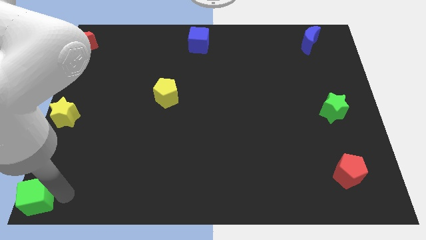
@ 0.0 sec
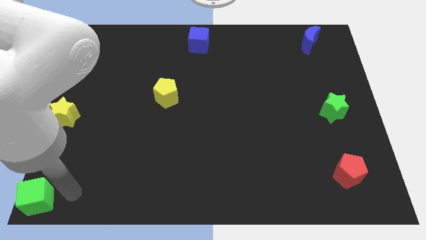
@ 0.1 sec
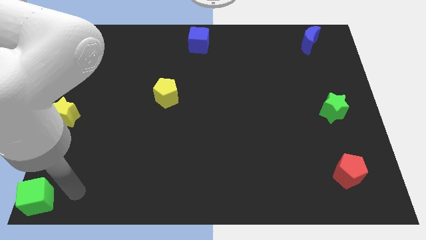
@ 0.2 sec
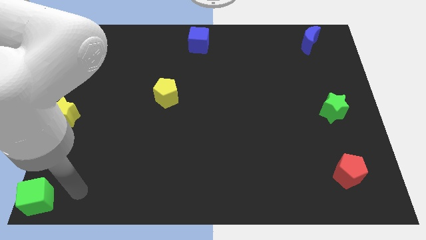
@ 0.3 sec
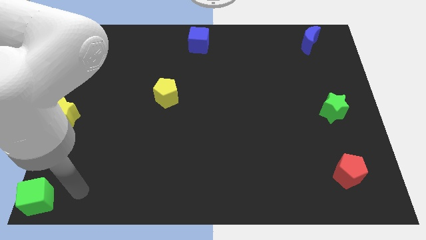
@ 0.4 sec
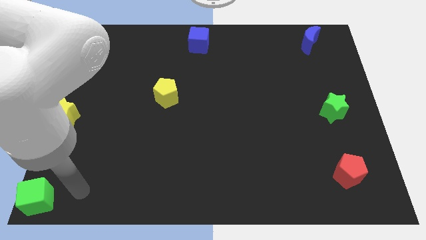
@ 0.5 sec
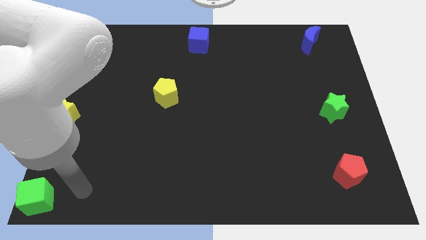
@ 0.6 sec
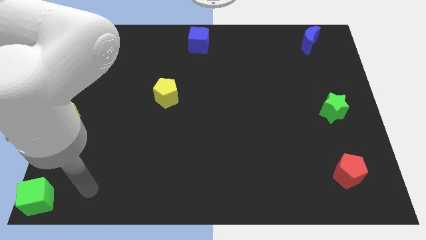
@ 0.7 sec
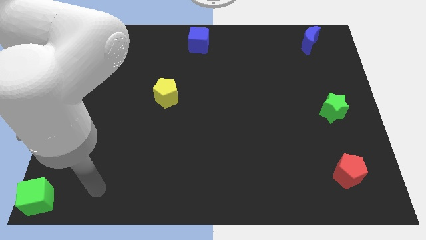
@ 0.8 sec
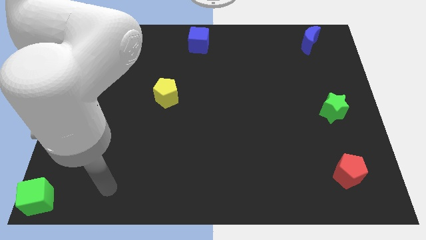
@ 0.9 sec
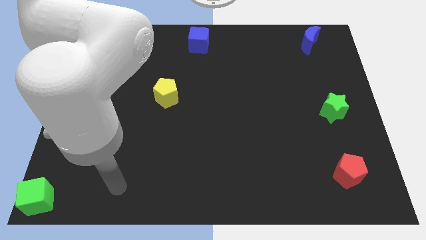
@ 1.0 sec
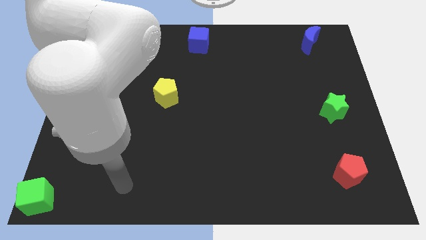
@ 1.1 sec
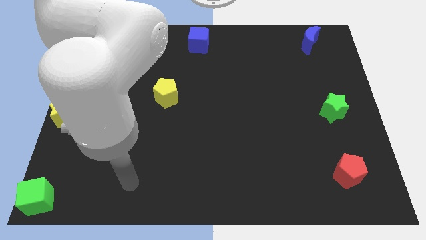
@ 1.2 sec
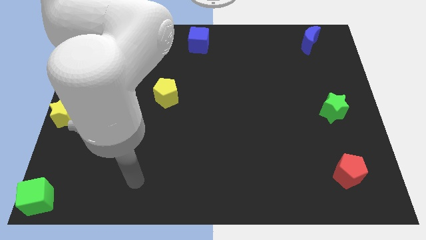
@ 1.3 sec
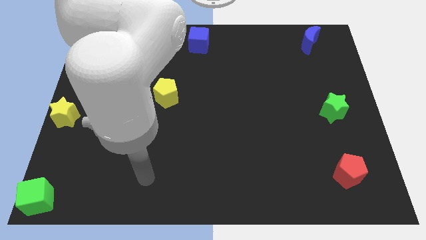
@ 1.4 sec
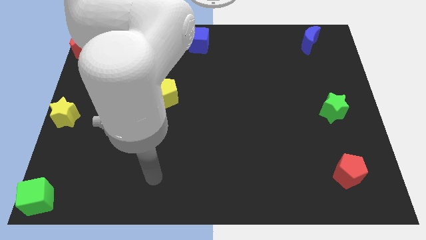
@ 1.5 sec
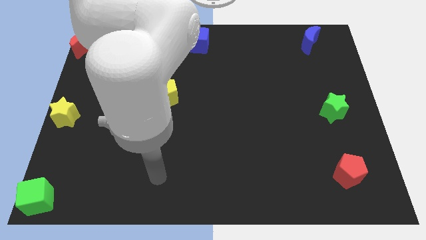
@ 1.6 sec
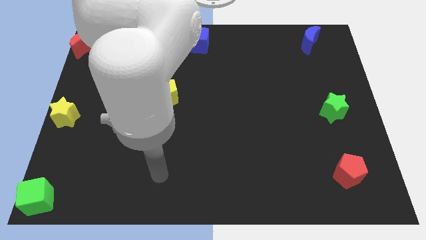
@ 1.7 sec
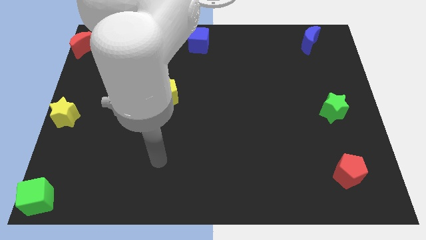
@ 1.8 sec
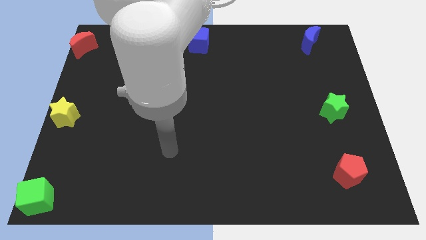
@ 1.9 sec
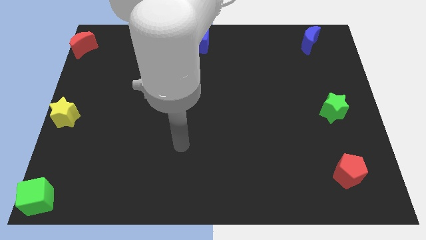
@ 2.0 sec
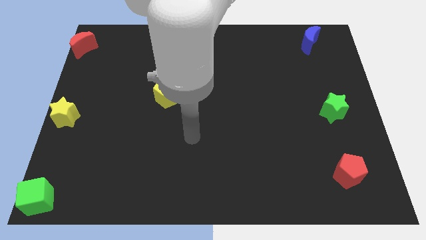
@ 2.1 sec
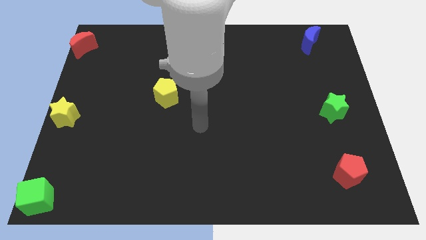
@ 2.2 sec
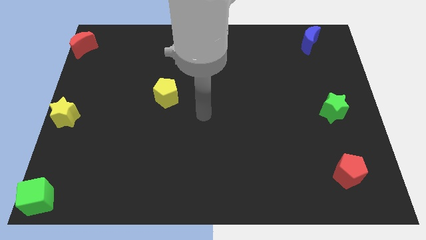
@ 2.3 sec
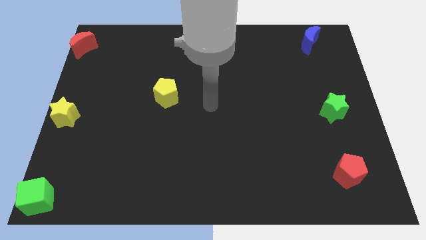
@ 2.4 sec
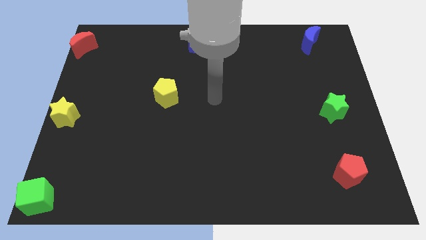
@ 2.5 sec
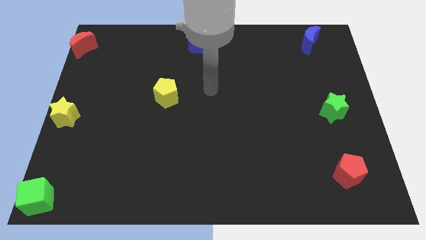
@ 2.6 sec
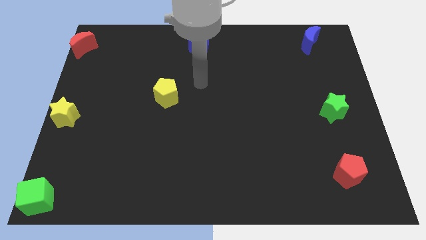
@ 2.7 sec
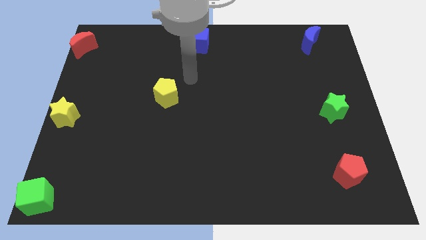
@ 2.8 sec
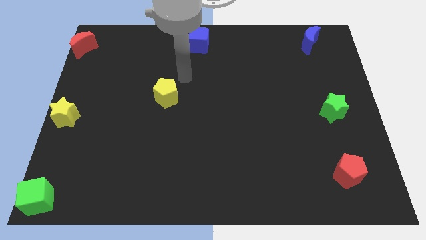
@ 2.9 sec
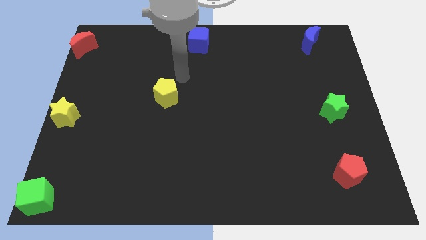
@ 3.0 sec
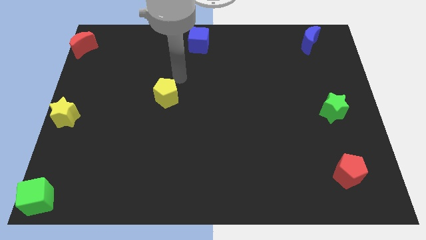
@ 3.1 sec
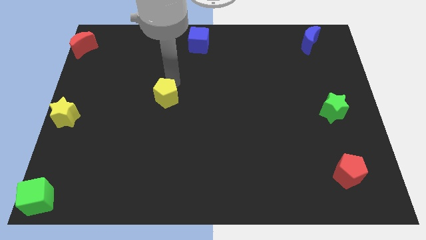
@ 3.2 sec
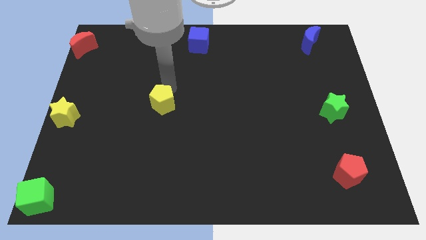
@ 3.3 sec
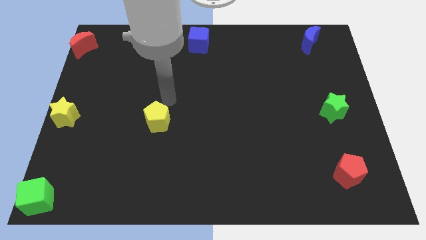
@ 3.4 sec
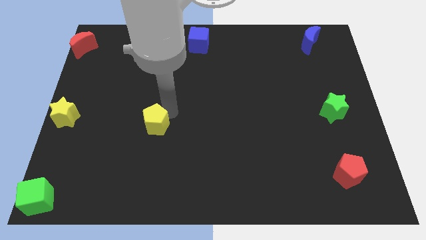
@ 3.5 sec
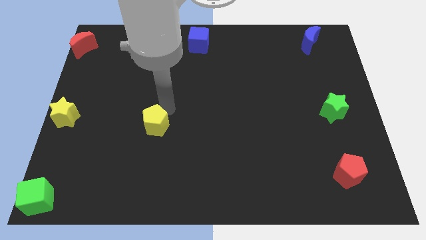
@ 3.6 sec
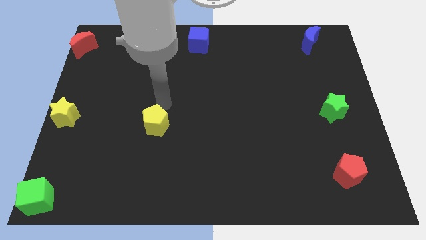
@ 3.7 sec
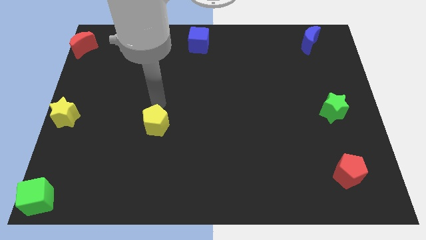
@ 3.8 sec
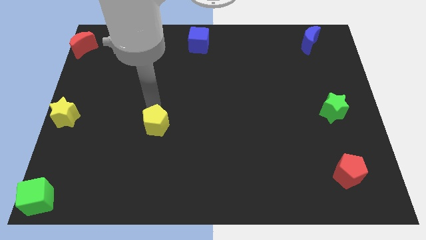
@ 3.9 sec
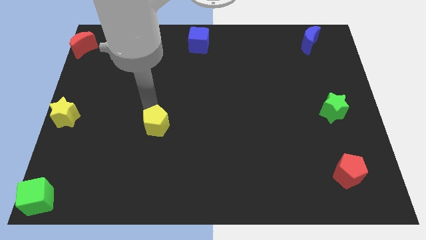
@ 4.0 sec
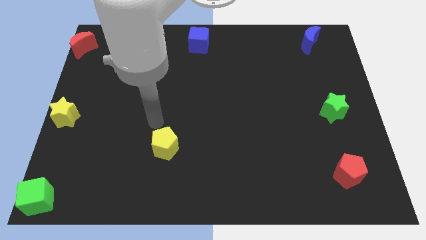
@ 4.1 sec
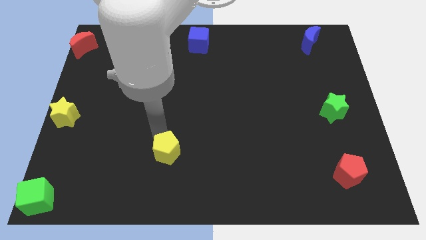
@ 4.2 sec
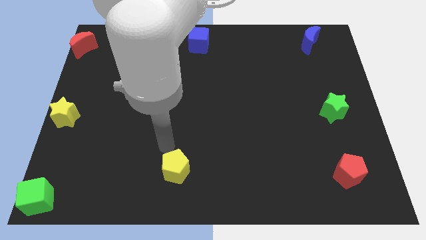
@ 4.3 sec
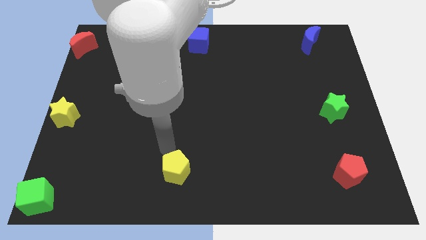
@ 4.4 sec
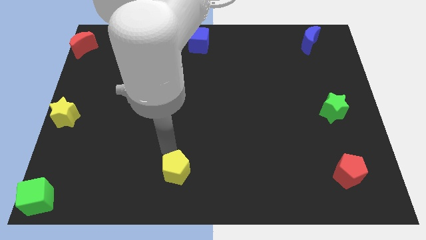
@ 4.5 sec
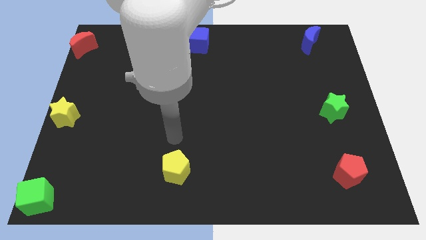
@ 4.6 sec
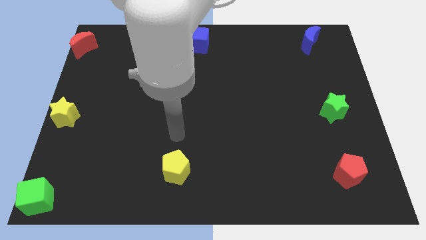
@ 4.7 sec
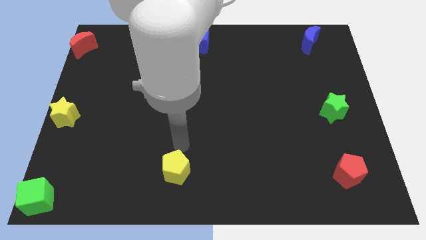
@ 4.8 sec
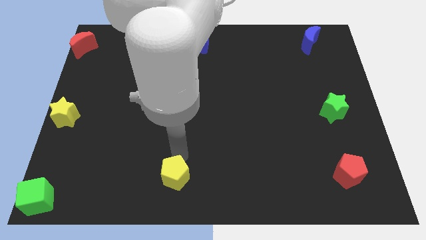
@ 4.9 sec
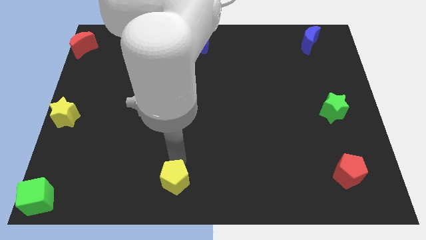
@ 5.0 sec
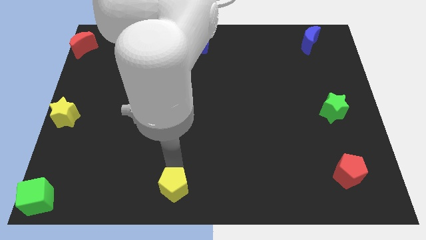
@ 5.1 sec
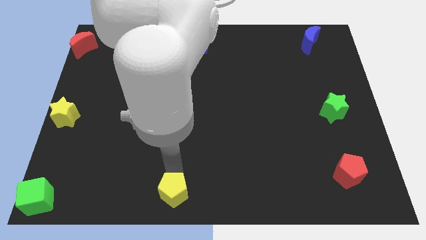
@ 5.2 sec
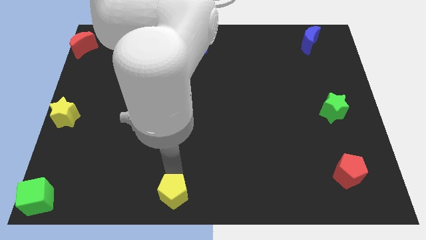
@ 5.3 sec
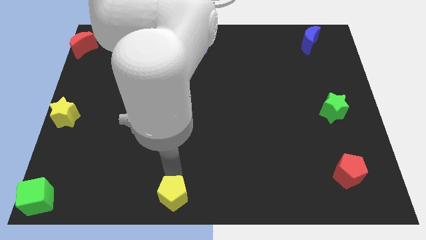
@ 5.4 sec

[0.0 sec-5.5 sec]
move the yellow pentagon towards the bottom centre of the board

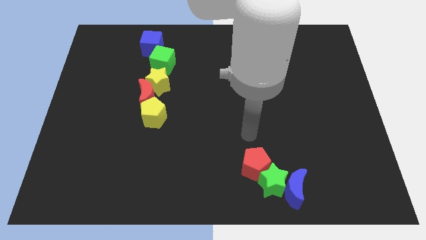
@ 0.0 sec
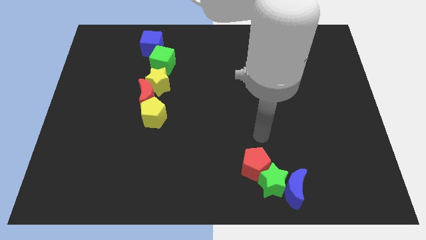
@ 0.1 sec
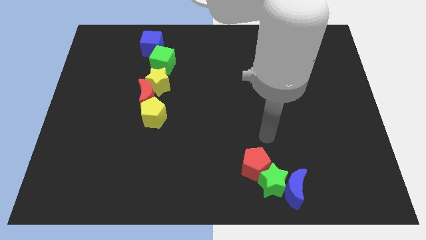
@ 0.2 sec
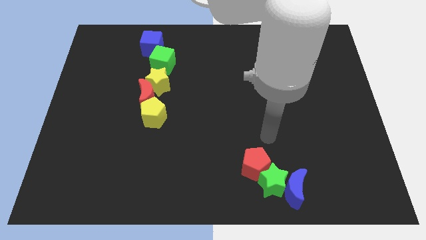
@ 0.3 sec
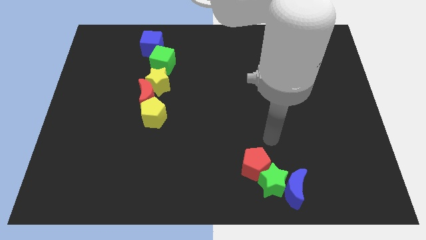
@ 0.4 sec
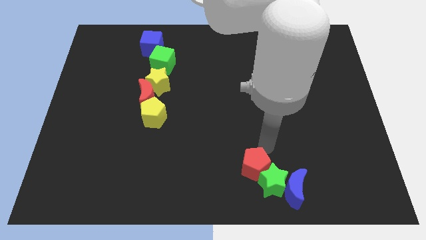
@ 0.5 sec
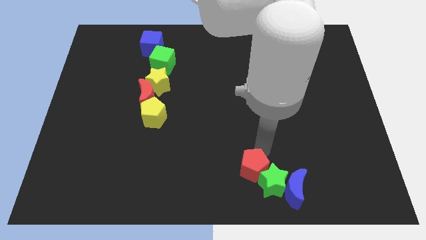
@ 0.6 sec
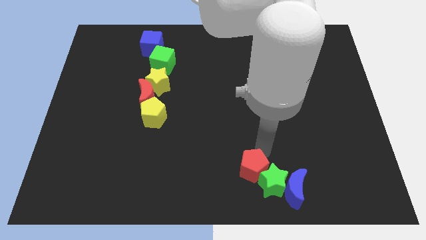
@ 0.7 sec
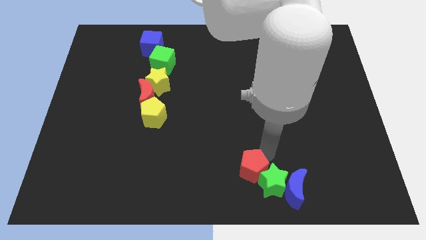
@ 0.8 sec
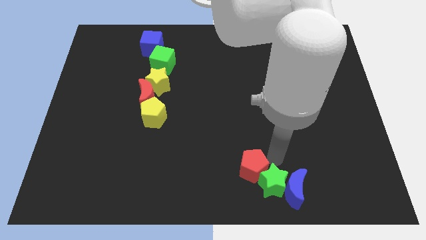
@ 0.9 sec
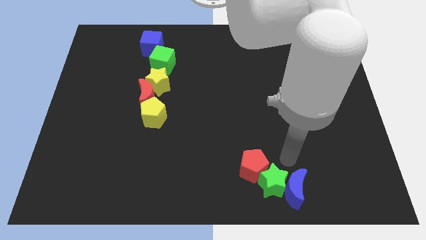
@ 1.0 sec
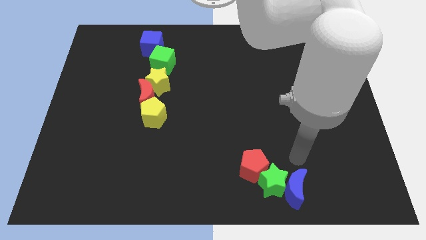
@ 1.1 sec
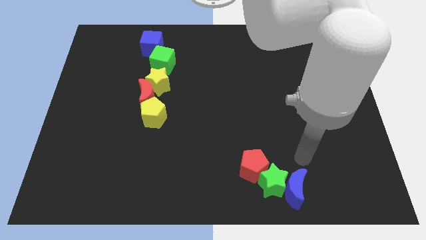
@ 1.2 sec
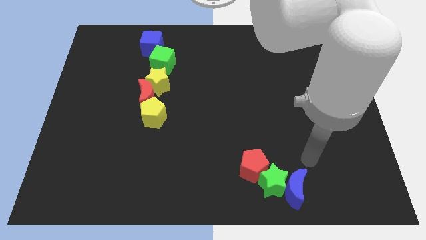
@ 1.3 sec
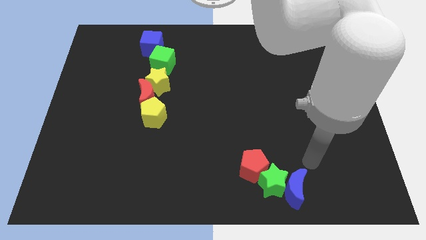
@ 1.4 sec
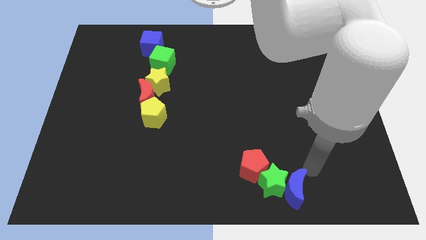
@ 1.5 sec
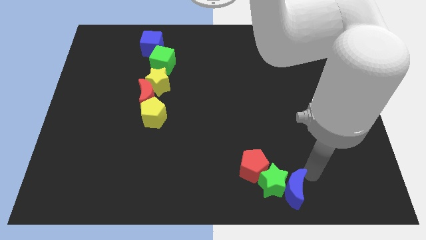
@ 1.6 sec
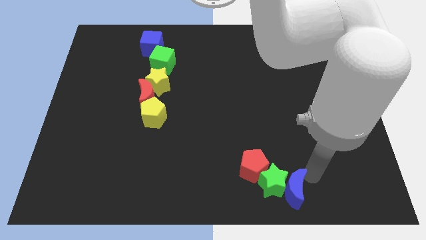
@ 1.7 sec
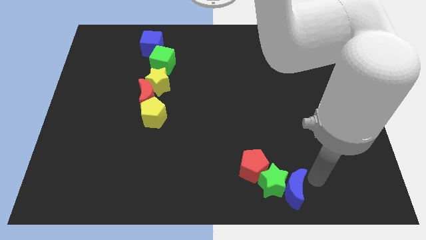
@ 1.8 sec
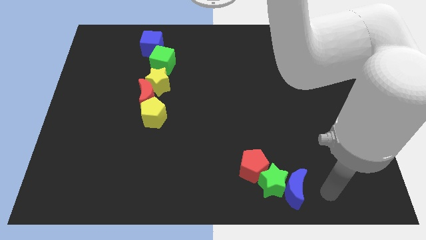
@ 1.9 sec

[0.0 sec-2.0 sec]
slightly touch the red pentagon

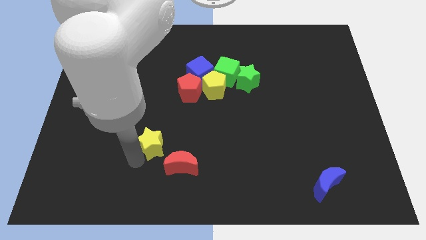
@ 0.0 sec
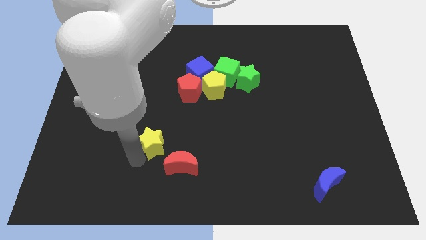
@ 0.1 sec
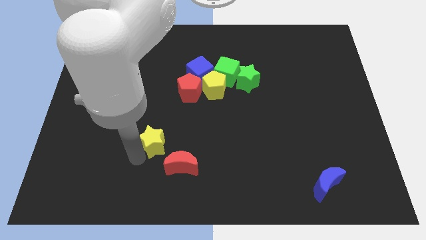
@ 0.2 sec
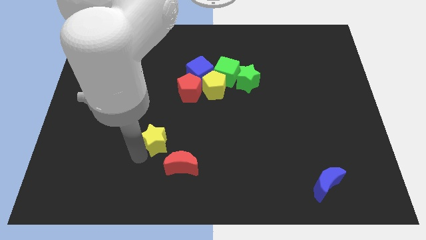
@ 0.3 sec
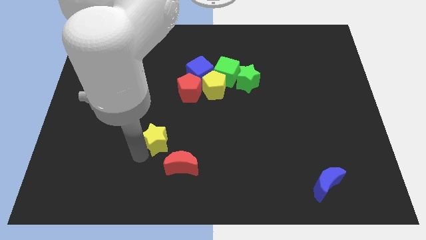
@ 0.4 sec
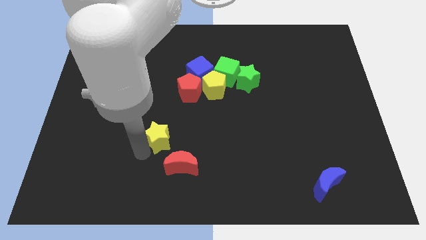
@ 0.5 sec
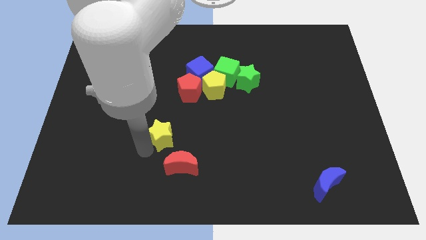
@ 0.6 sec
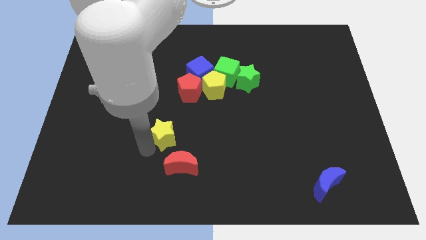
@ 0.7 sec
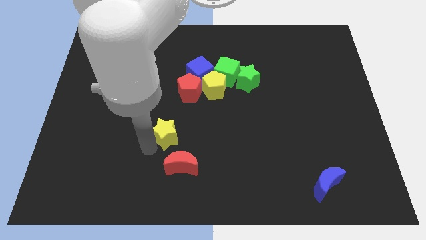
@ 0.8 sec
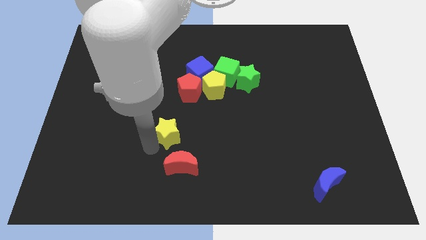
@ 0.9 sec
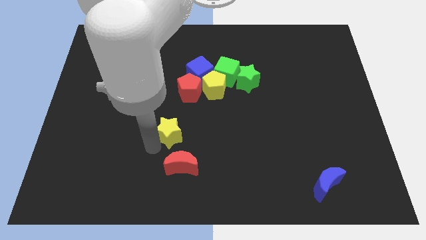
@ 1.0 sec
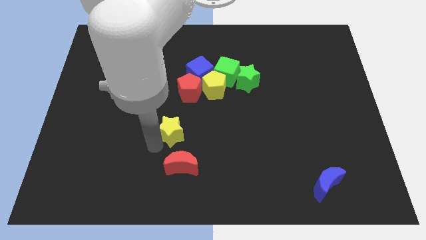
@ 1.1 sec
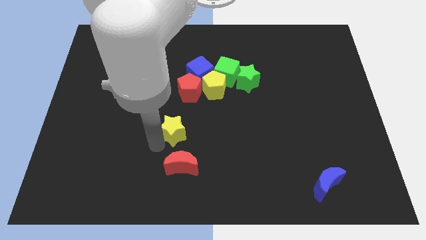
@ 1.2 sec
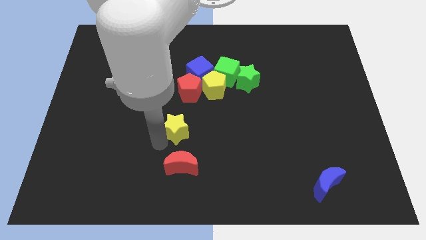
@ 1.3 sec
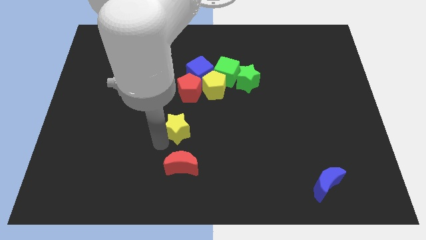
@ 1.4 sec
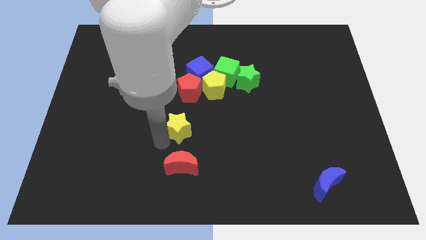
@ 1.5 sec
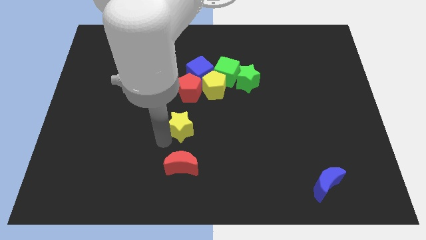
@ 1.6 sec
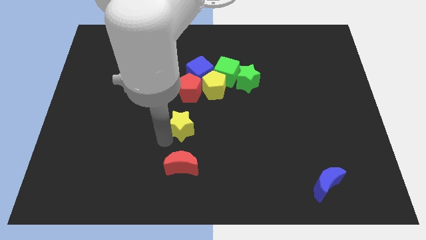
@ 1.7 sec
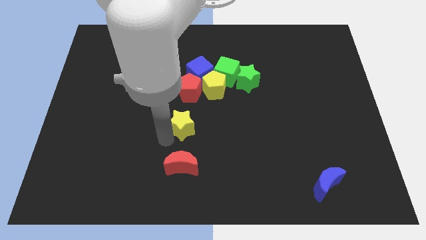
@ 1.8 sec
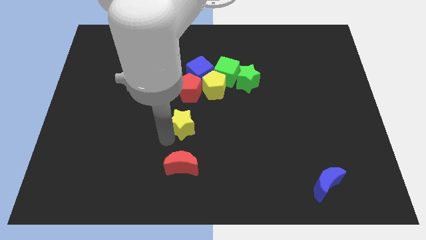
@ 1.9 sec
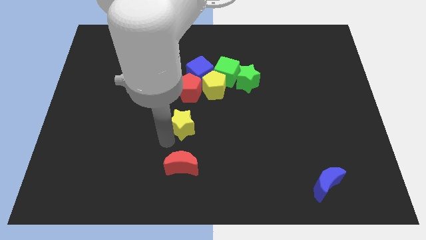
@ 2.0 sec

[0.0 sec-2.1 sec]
put the yellow star in between the red pentagon and red crescent
